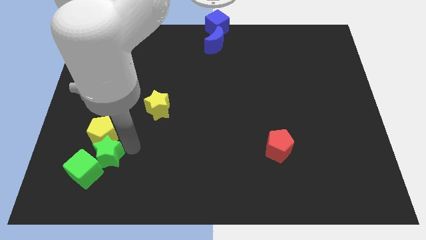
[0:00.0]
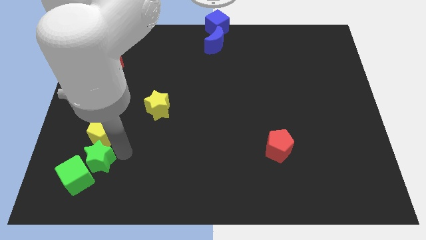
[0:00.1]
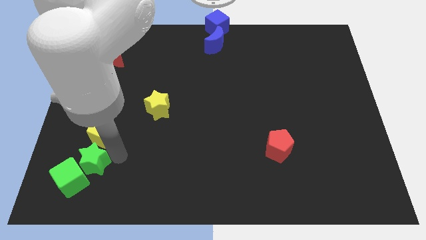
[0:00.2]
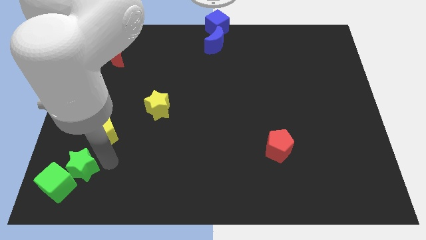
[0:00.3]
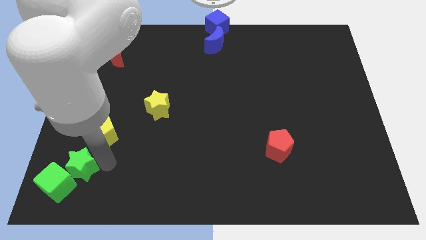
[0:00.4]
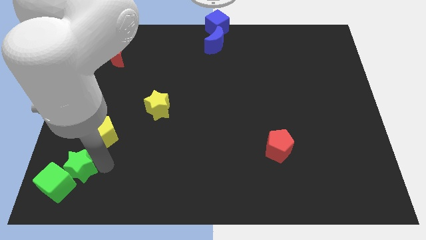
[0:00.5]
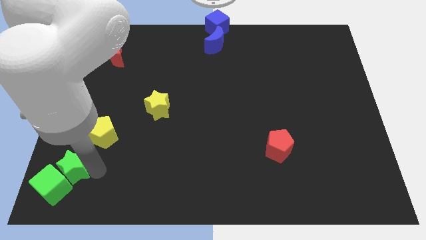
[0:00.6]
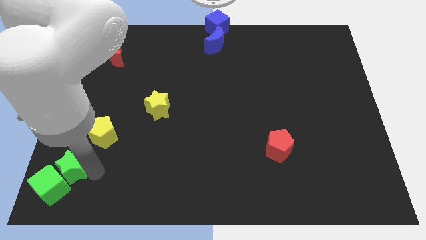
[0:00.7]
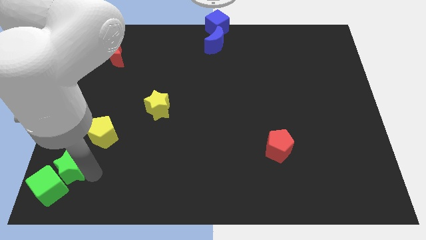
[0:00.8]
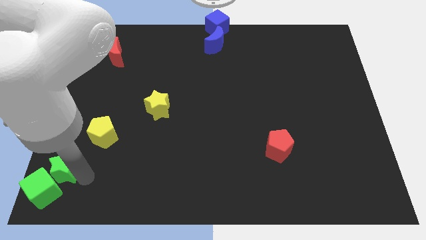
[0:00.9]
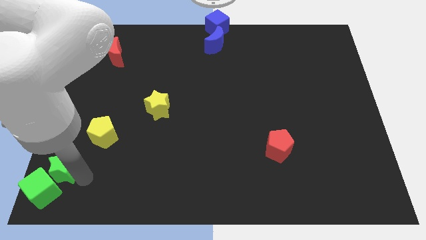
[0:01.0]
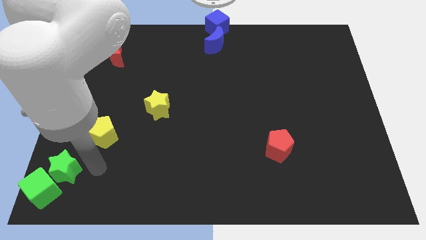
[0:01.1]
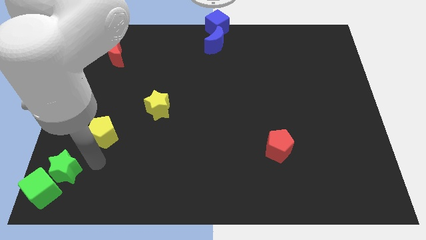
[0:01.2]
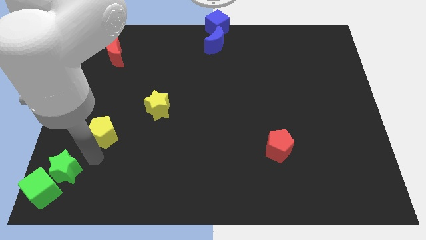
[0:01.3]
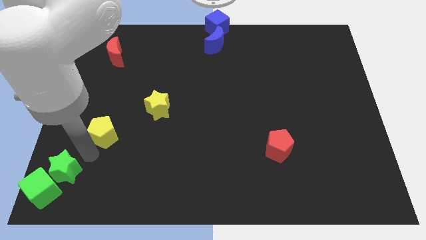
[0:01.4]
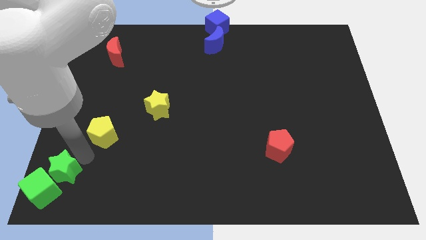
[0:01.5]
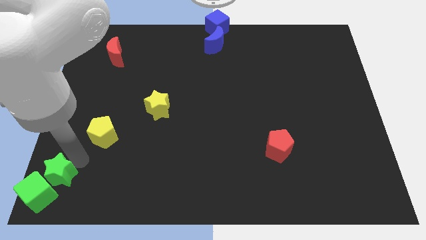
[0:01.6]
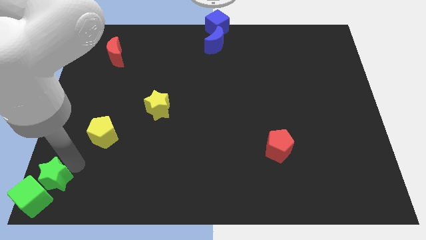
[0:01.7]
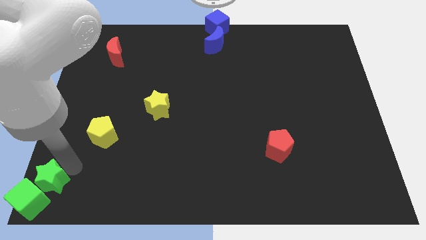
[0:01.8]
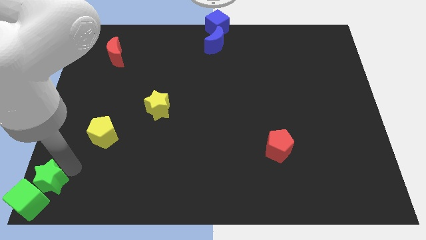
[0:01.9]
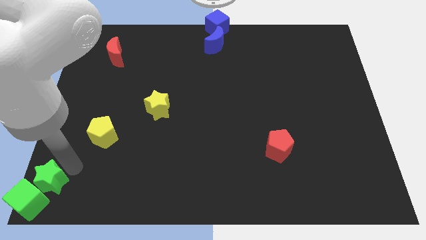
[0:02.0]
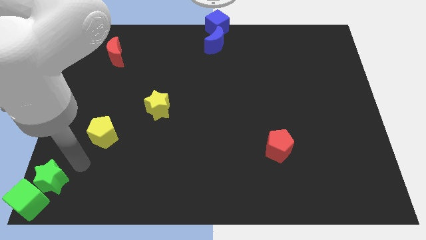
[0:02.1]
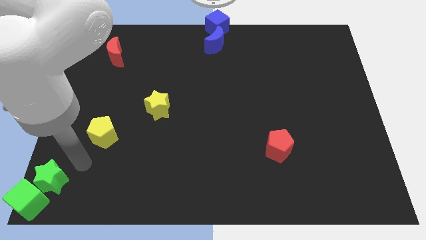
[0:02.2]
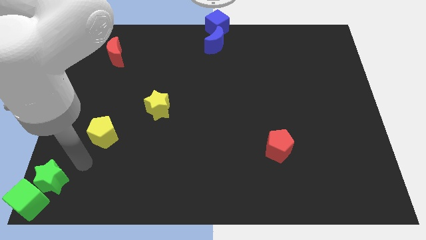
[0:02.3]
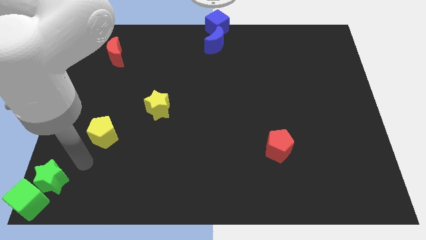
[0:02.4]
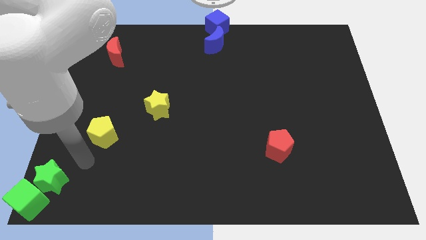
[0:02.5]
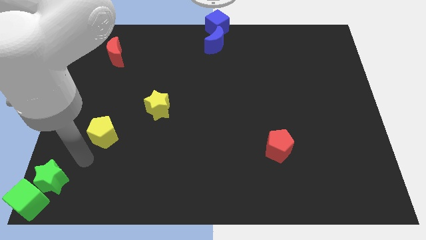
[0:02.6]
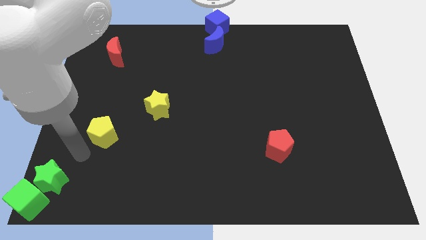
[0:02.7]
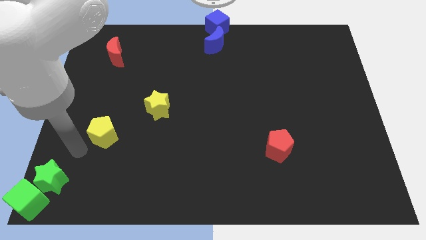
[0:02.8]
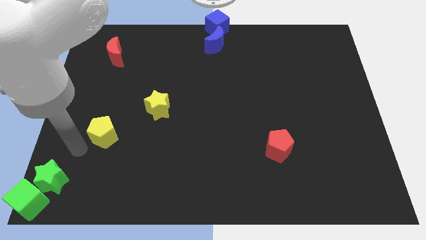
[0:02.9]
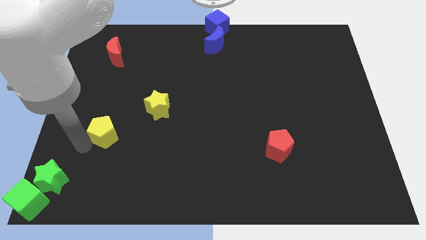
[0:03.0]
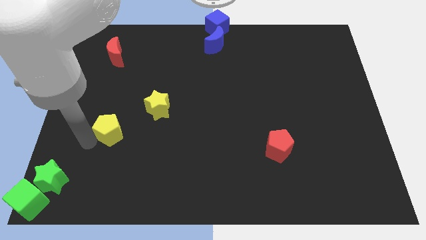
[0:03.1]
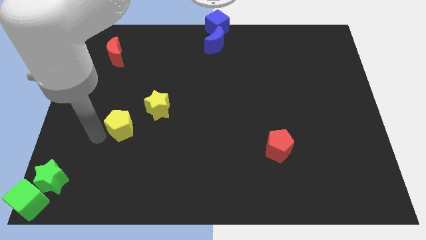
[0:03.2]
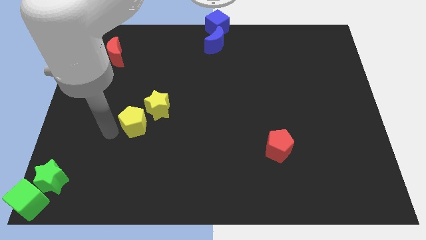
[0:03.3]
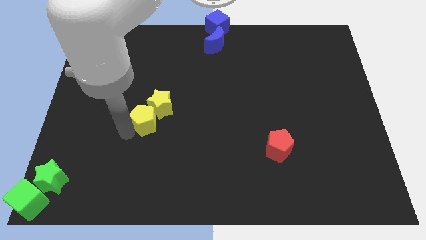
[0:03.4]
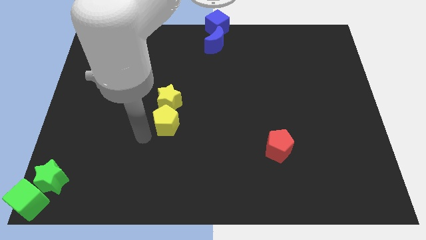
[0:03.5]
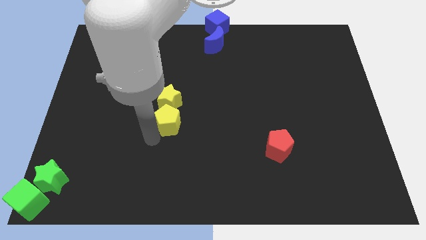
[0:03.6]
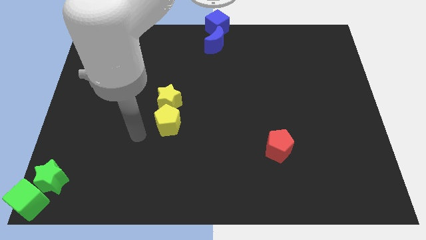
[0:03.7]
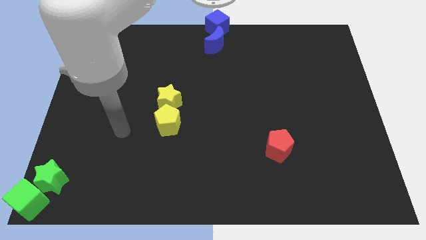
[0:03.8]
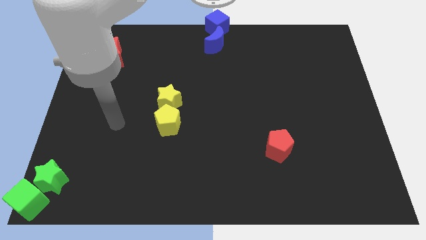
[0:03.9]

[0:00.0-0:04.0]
push the green blocks to the bottom middle of the board

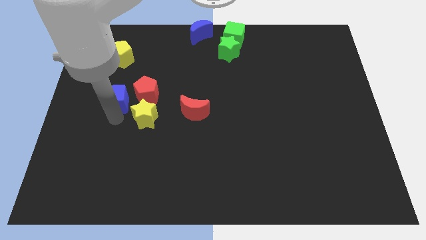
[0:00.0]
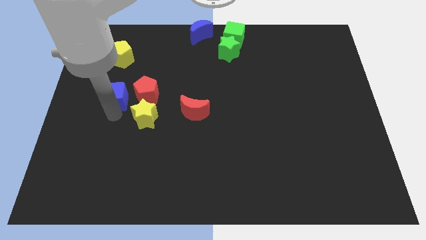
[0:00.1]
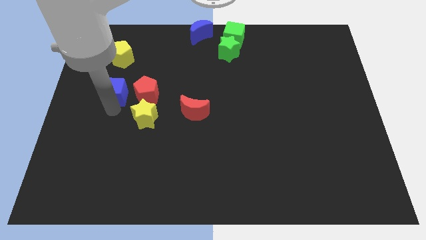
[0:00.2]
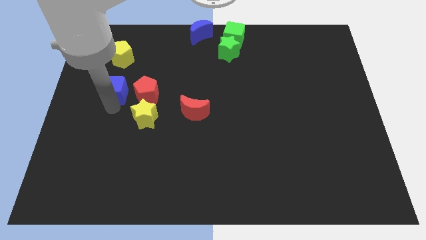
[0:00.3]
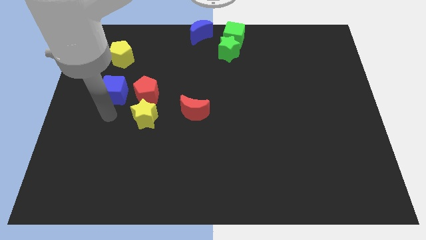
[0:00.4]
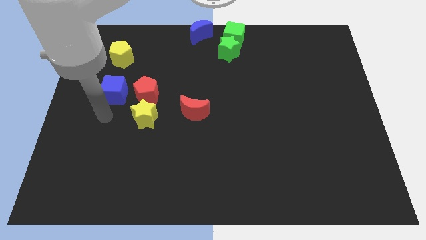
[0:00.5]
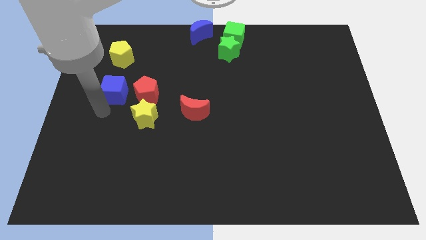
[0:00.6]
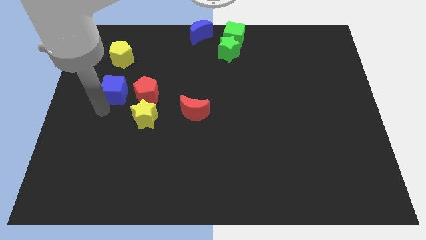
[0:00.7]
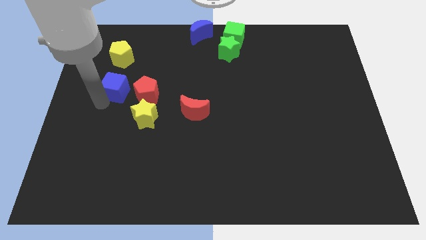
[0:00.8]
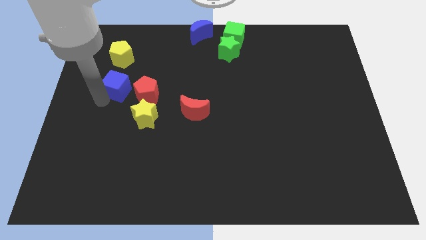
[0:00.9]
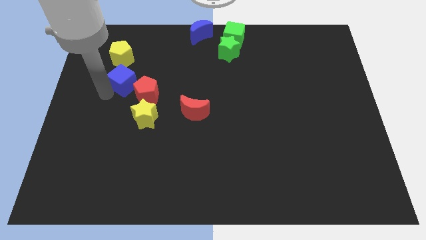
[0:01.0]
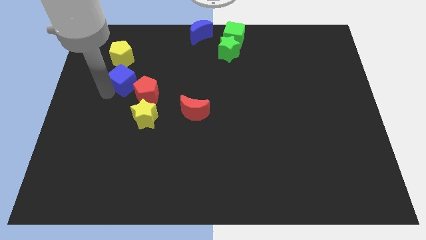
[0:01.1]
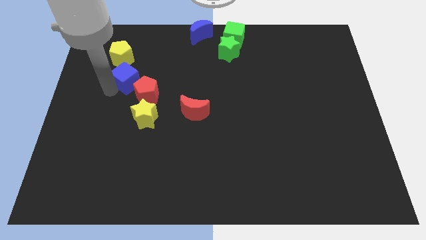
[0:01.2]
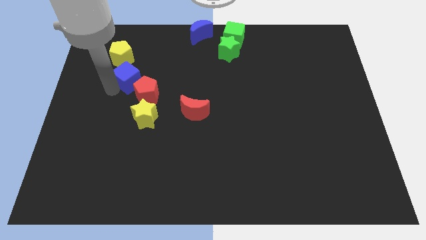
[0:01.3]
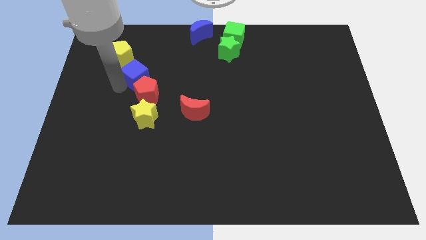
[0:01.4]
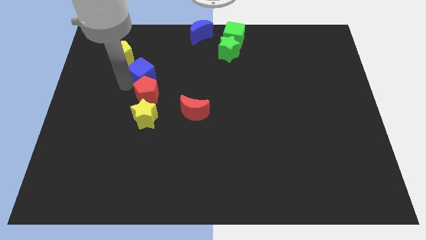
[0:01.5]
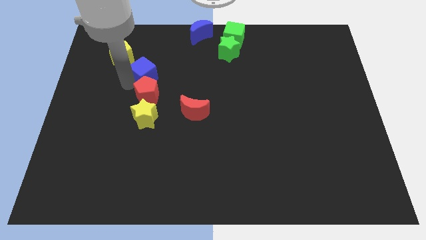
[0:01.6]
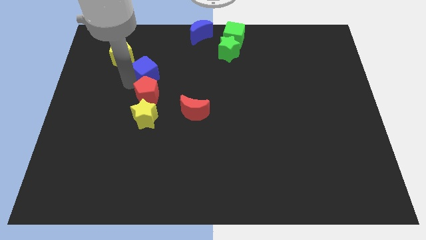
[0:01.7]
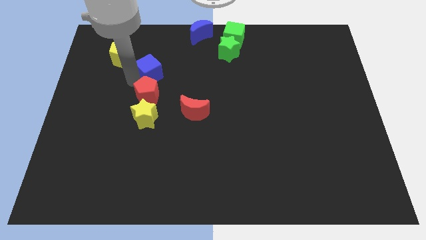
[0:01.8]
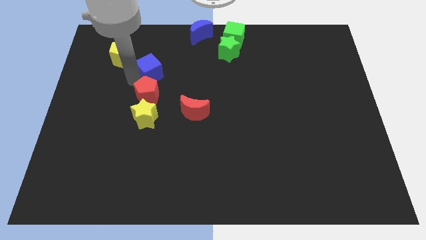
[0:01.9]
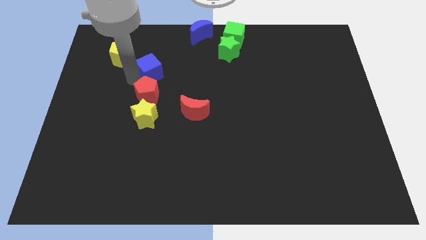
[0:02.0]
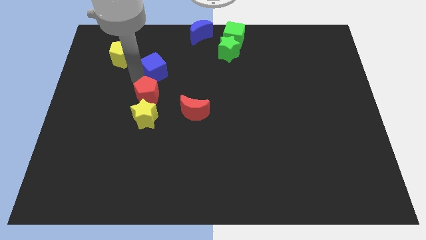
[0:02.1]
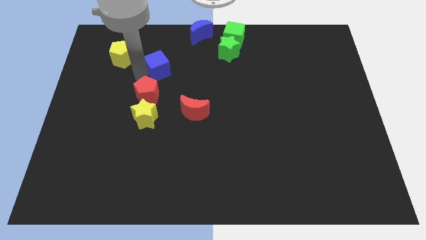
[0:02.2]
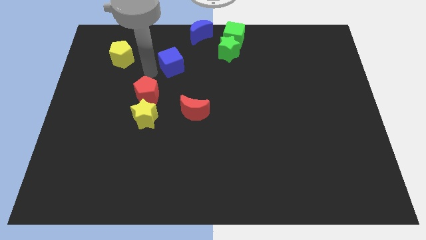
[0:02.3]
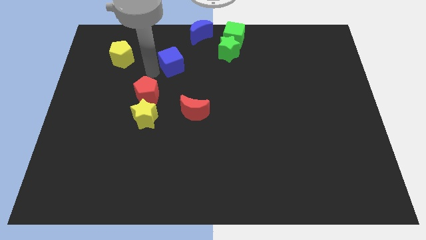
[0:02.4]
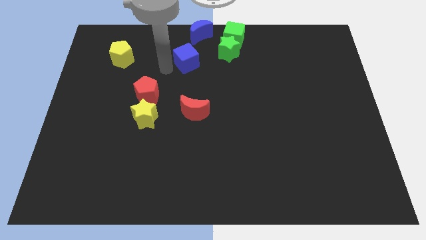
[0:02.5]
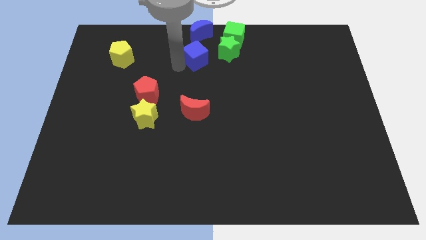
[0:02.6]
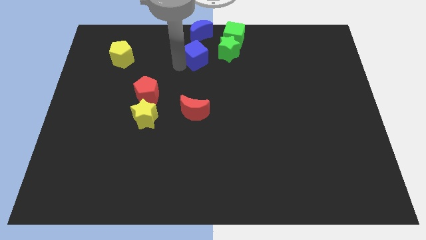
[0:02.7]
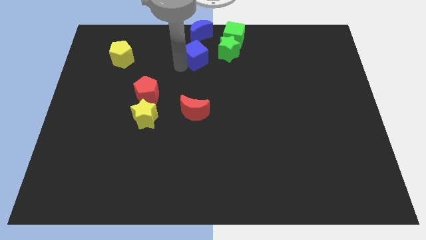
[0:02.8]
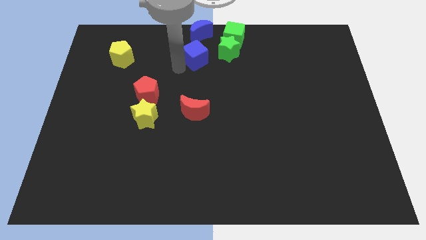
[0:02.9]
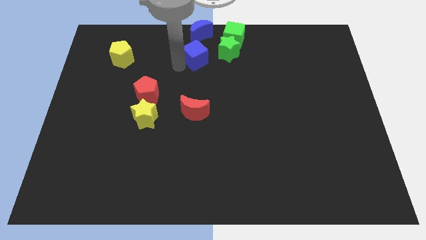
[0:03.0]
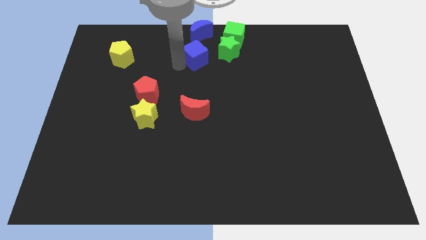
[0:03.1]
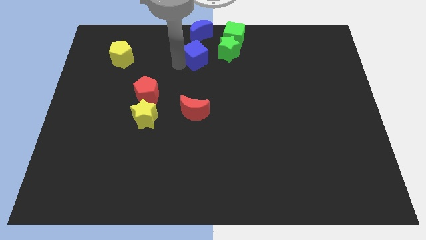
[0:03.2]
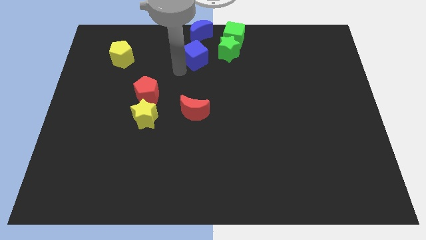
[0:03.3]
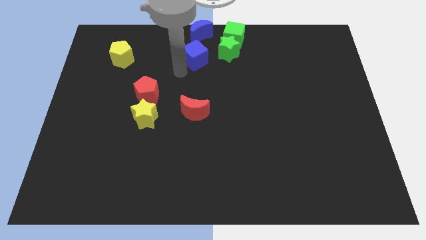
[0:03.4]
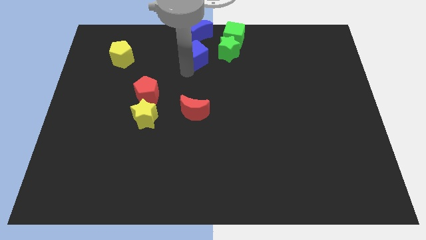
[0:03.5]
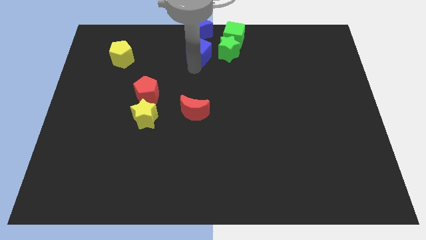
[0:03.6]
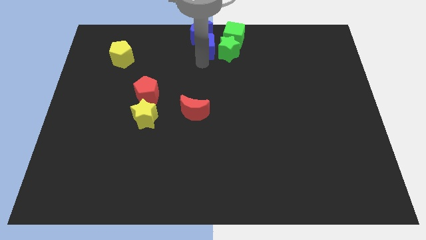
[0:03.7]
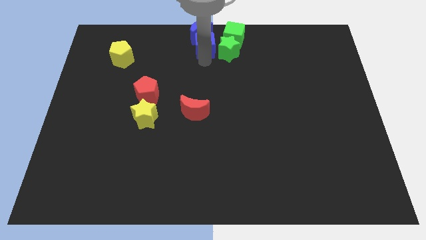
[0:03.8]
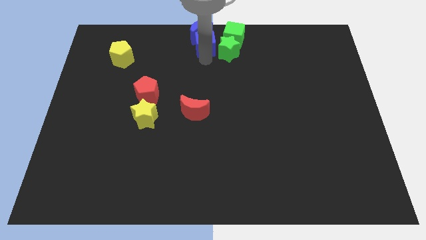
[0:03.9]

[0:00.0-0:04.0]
move the blue cube below the blue crescent

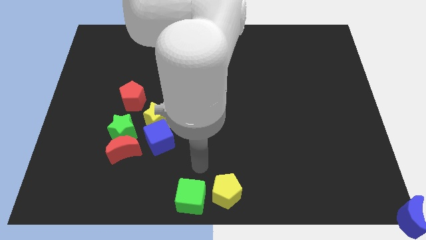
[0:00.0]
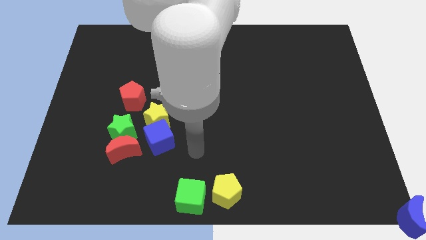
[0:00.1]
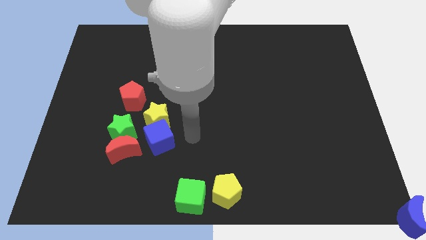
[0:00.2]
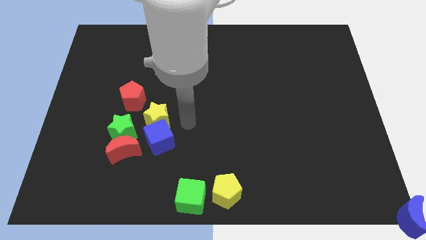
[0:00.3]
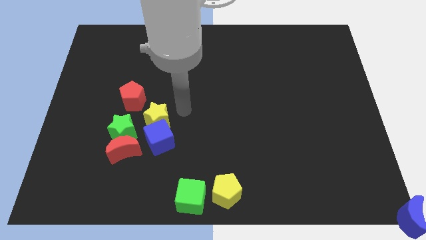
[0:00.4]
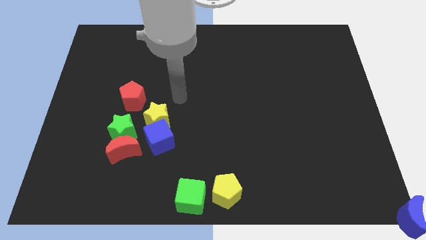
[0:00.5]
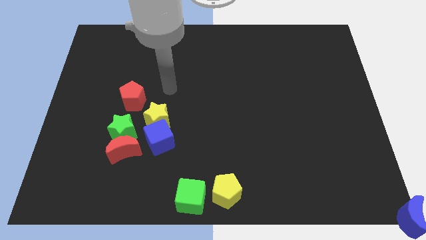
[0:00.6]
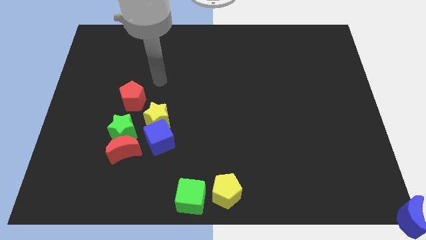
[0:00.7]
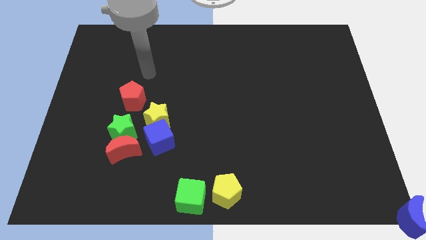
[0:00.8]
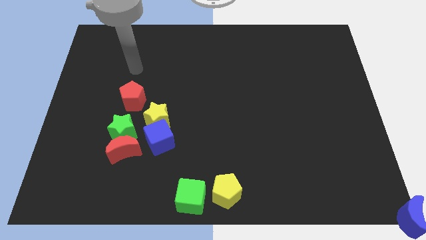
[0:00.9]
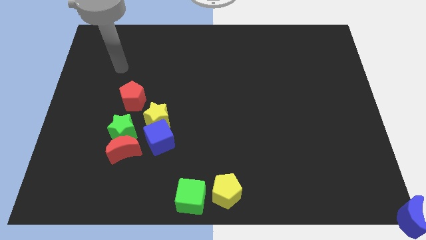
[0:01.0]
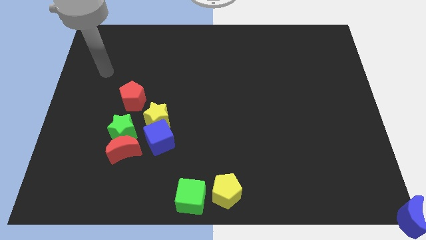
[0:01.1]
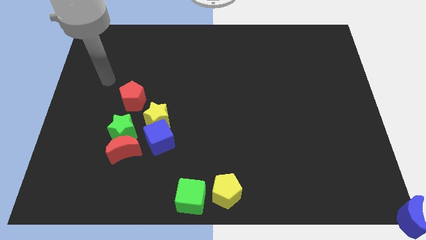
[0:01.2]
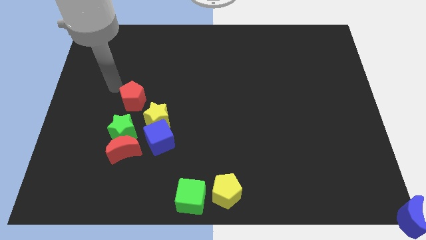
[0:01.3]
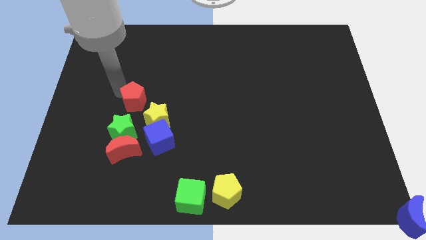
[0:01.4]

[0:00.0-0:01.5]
move your arm to the top left of the red pentagon
